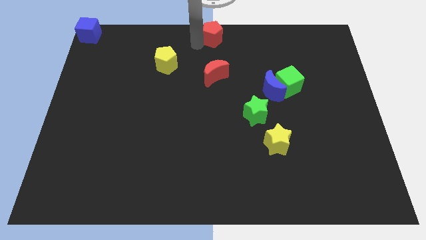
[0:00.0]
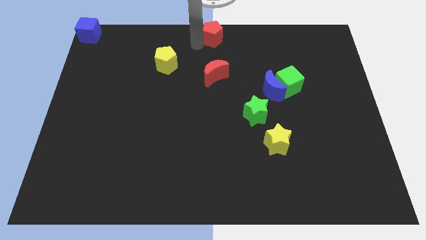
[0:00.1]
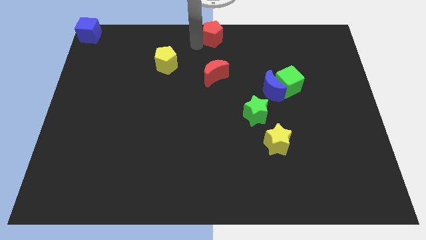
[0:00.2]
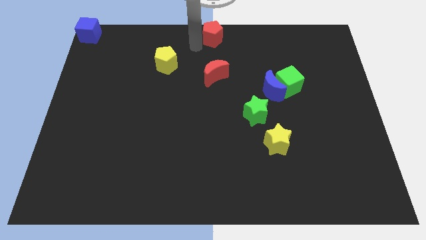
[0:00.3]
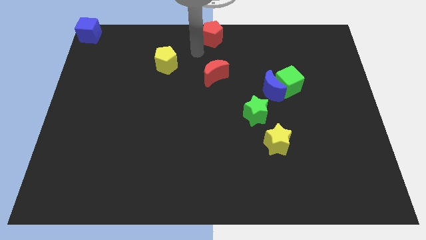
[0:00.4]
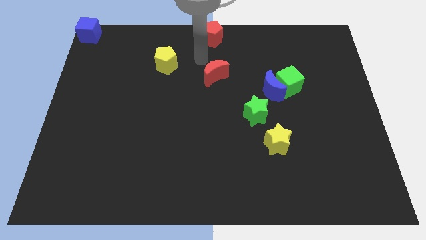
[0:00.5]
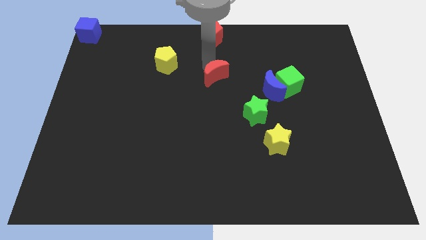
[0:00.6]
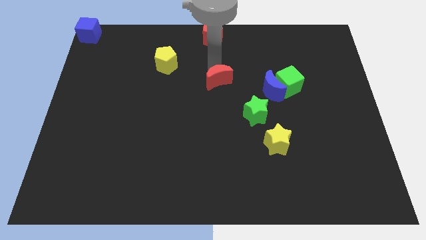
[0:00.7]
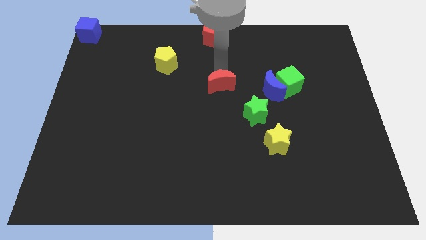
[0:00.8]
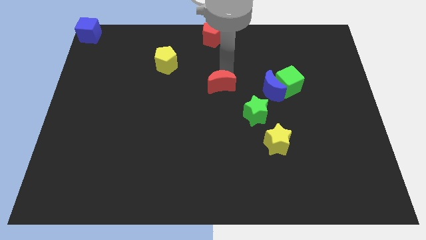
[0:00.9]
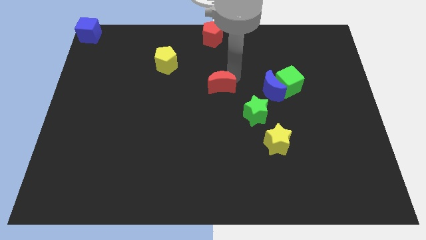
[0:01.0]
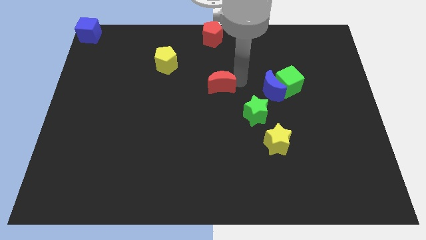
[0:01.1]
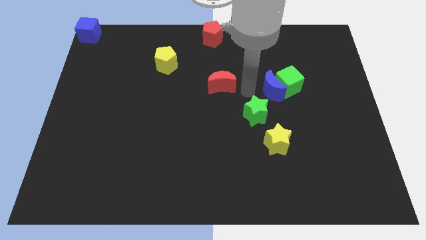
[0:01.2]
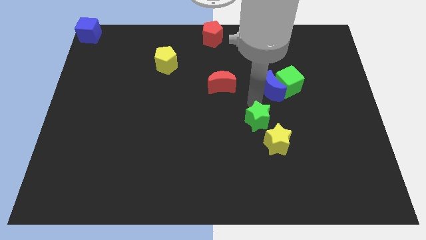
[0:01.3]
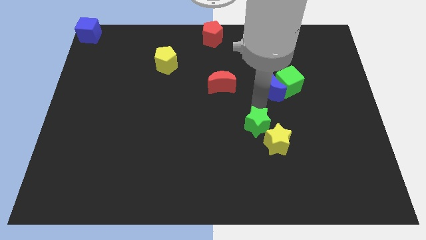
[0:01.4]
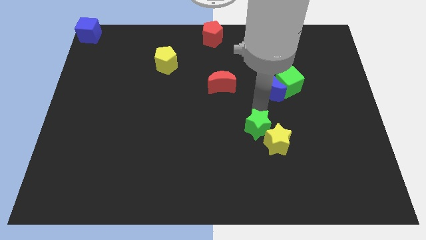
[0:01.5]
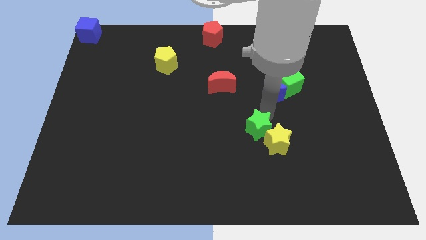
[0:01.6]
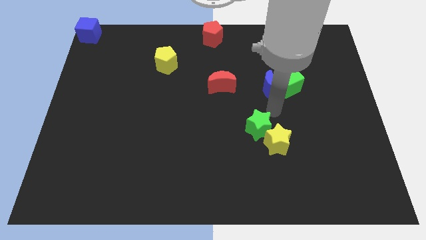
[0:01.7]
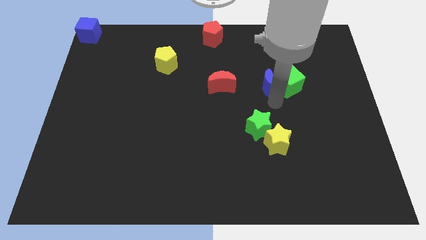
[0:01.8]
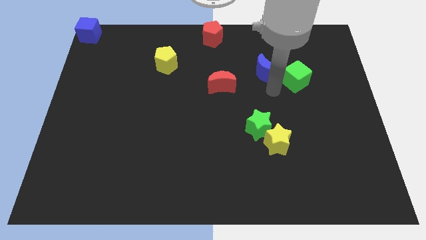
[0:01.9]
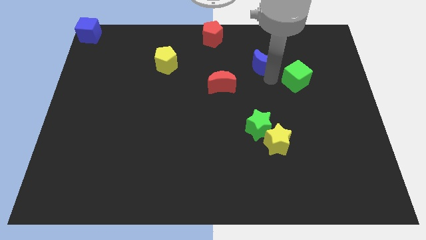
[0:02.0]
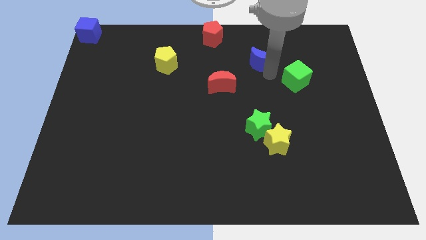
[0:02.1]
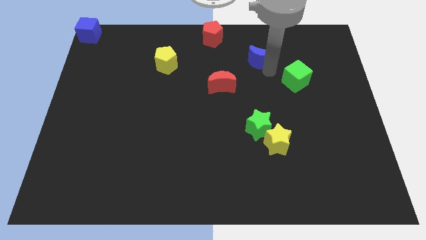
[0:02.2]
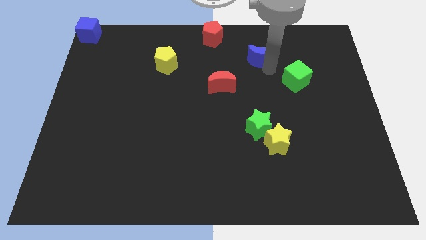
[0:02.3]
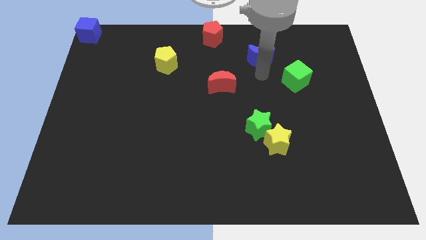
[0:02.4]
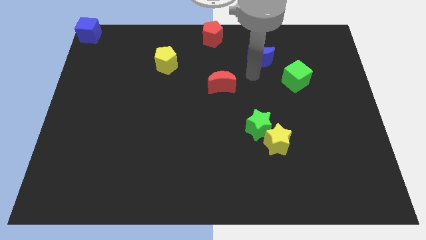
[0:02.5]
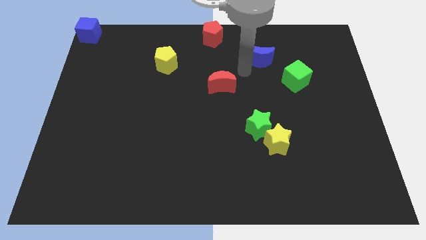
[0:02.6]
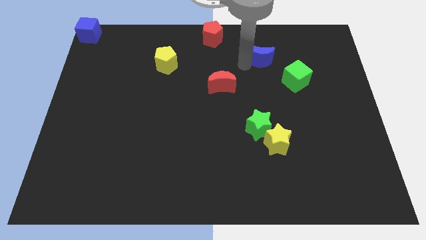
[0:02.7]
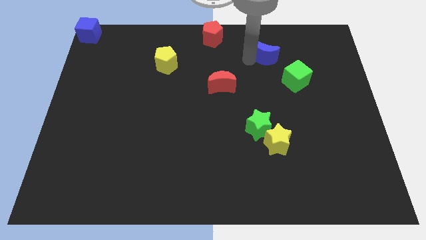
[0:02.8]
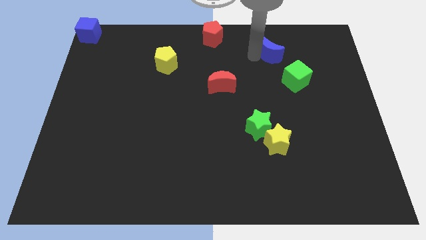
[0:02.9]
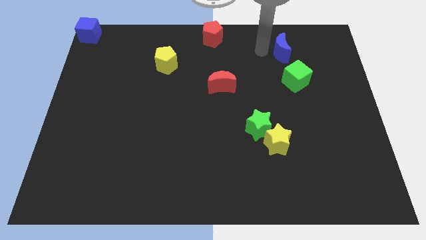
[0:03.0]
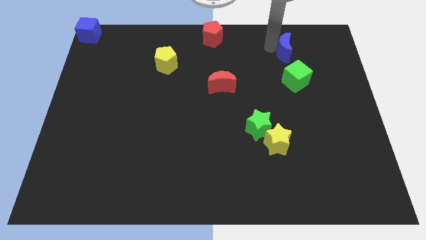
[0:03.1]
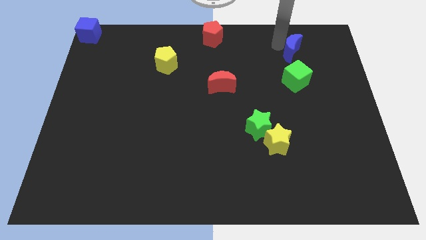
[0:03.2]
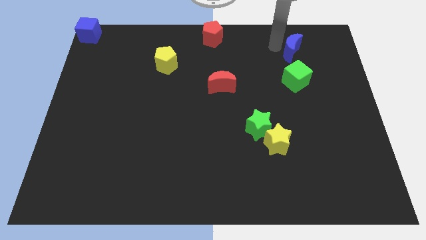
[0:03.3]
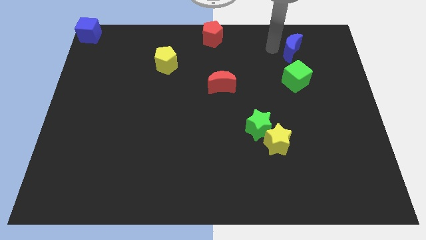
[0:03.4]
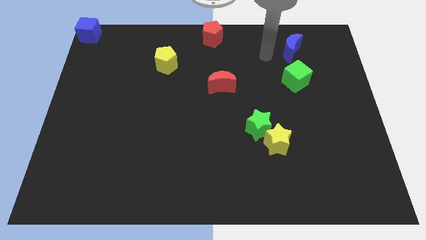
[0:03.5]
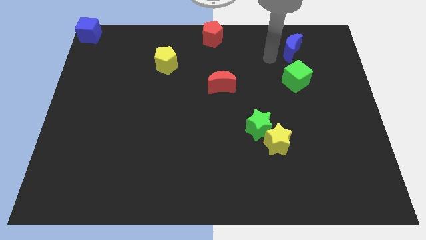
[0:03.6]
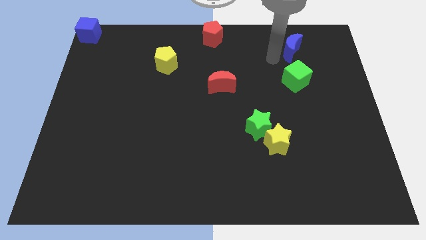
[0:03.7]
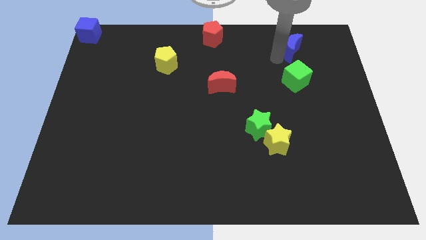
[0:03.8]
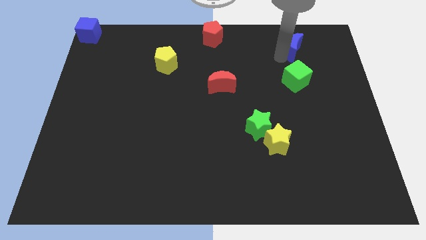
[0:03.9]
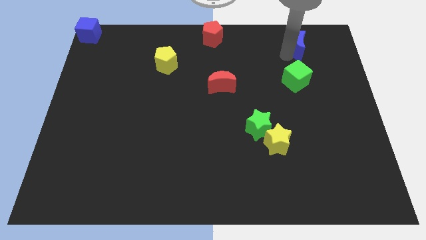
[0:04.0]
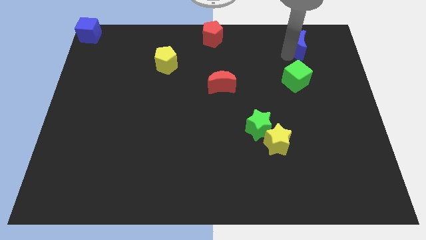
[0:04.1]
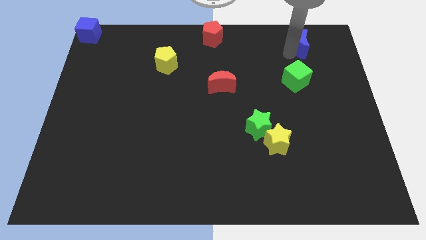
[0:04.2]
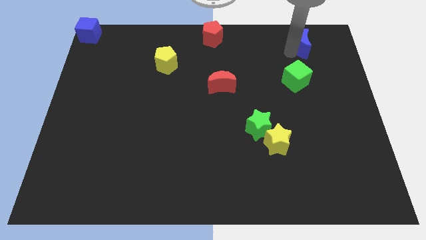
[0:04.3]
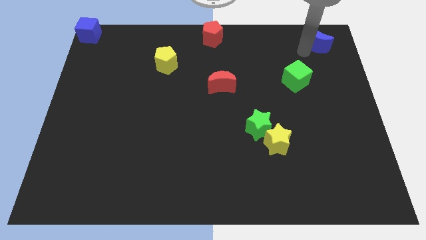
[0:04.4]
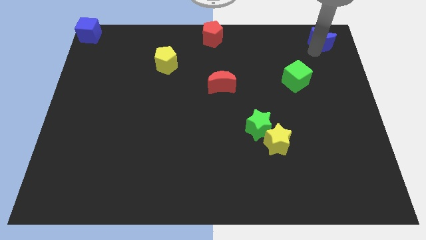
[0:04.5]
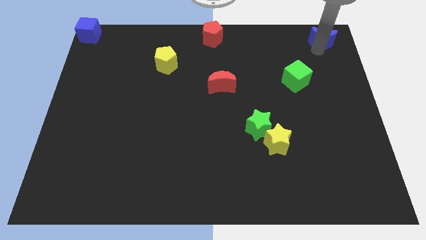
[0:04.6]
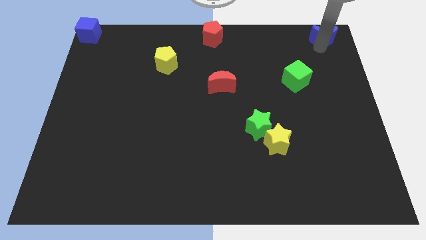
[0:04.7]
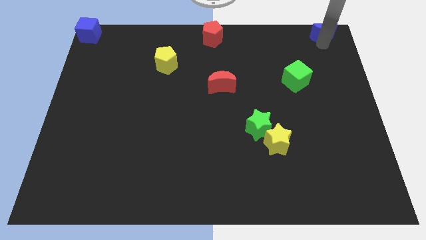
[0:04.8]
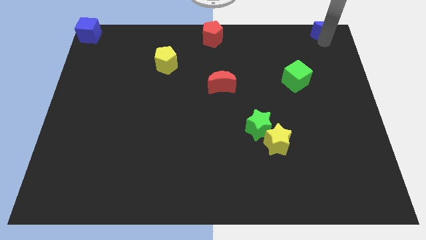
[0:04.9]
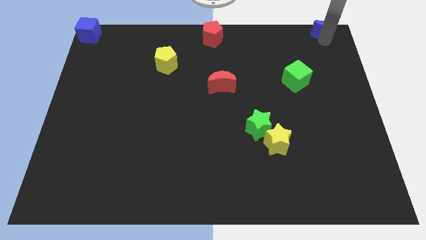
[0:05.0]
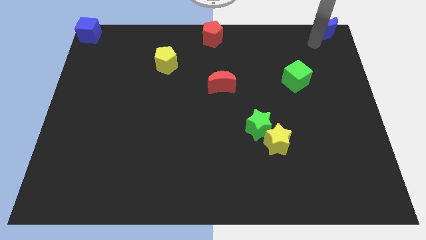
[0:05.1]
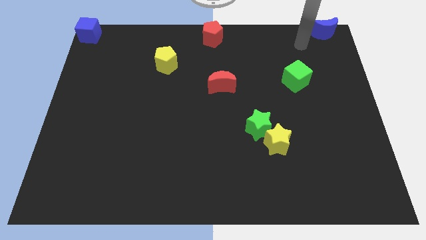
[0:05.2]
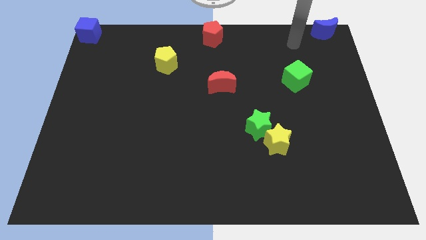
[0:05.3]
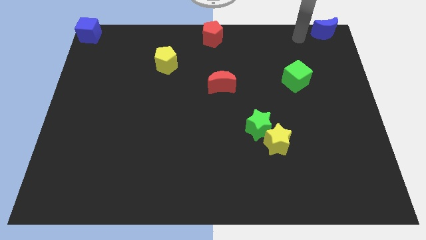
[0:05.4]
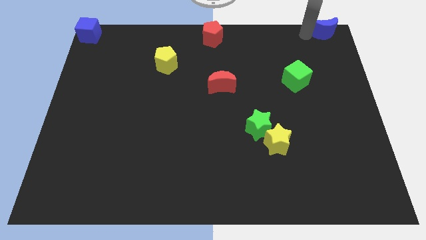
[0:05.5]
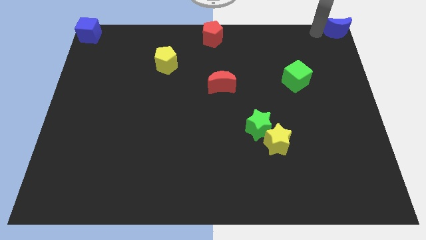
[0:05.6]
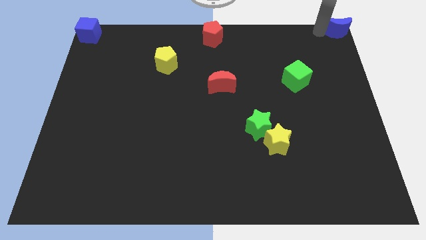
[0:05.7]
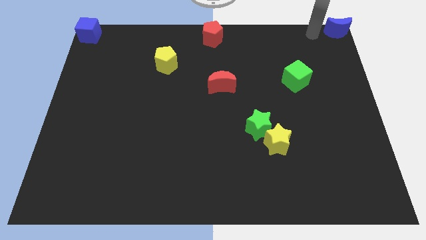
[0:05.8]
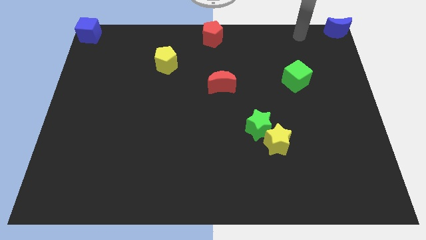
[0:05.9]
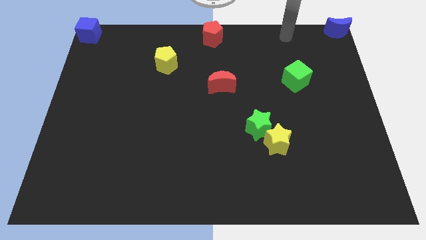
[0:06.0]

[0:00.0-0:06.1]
move the blue moon to the top right corner of the board

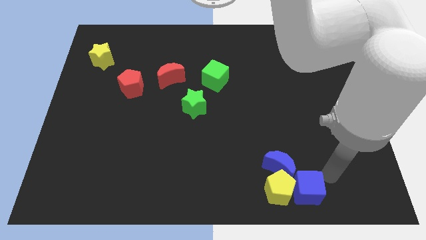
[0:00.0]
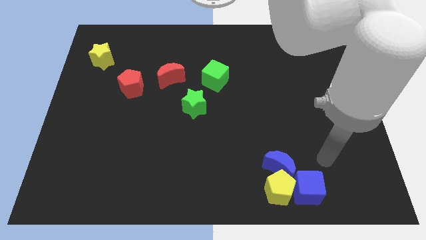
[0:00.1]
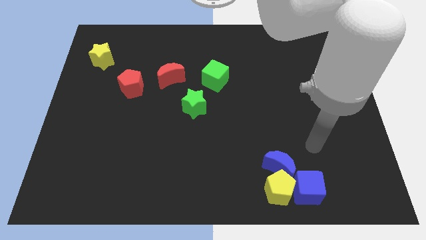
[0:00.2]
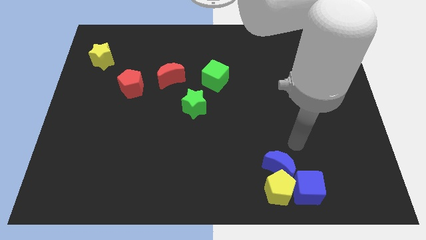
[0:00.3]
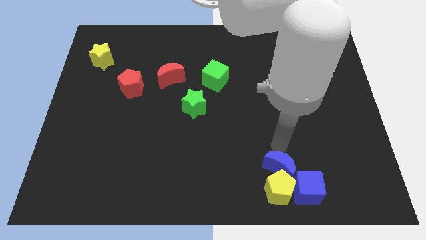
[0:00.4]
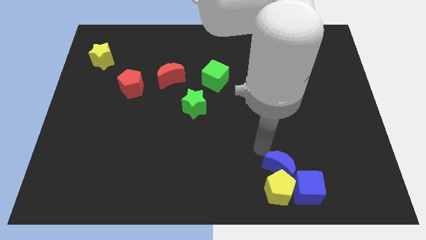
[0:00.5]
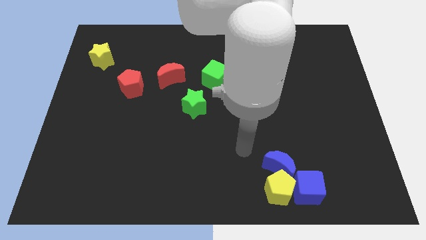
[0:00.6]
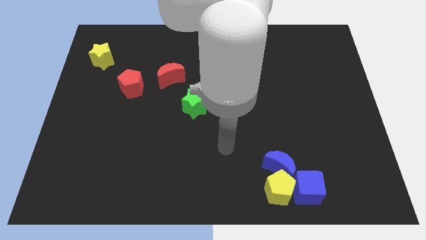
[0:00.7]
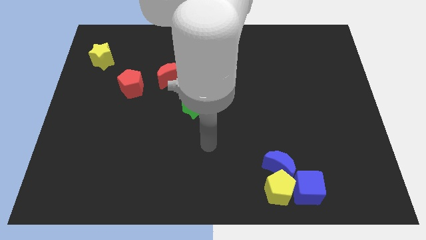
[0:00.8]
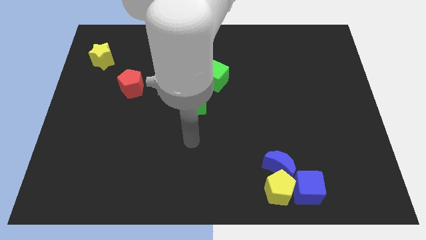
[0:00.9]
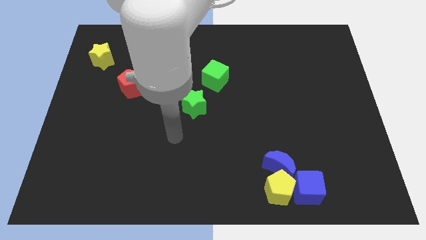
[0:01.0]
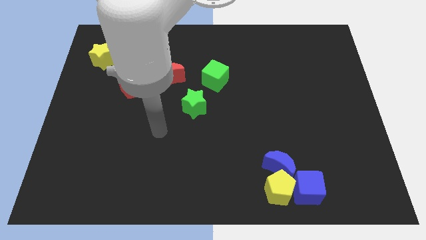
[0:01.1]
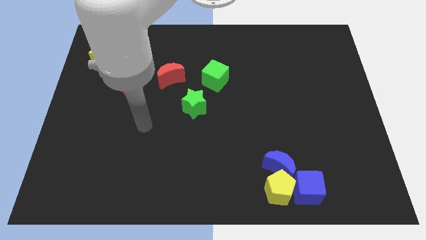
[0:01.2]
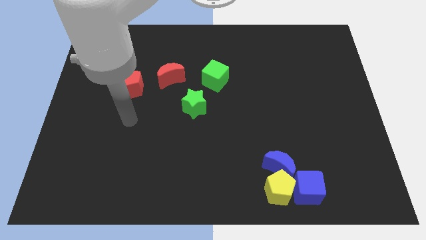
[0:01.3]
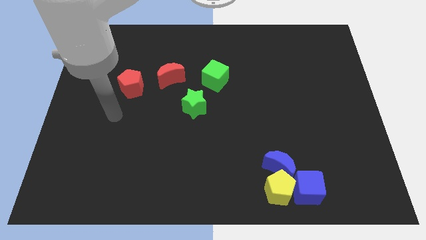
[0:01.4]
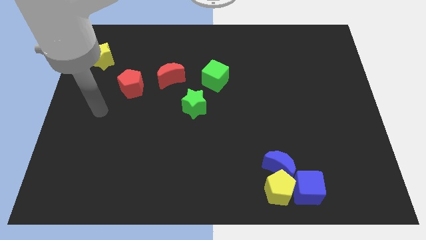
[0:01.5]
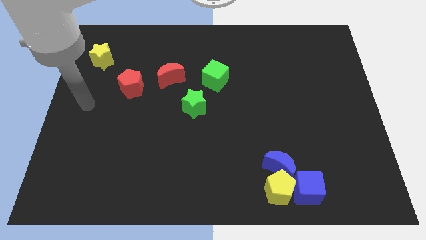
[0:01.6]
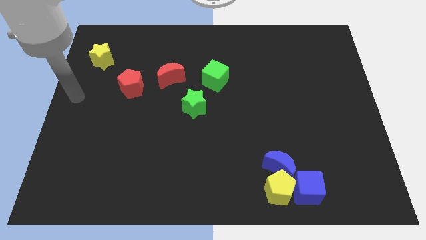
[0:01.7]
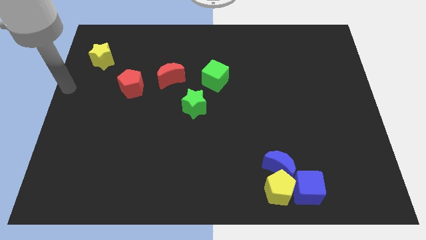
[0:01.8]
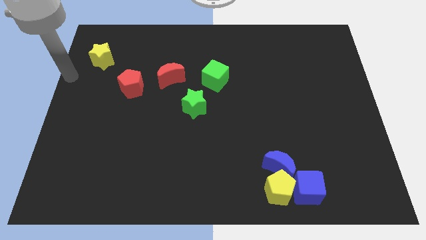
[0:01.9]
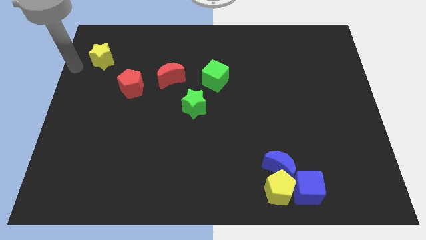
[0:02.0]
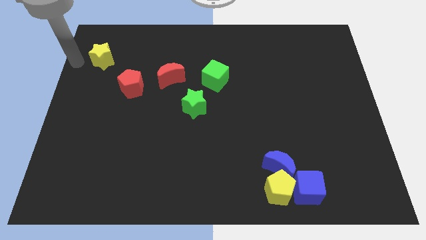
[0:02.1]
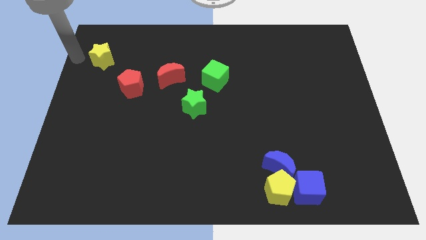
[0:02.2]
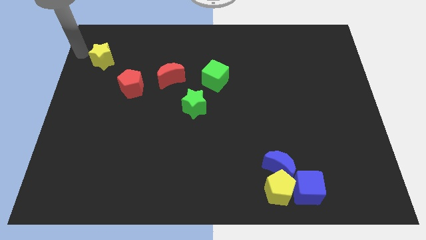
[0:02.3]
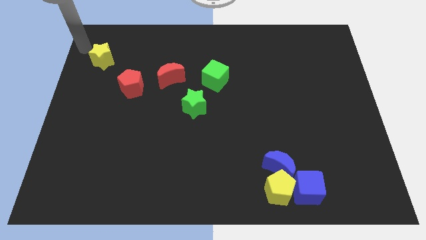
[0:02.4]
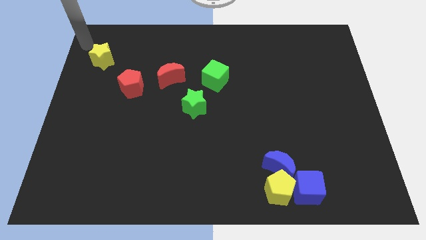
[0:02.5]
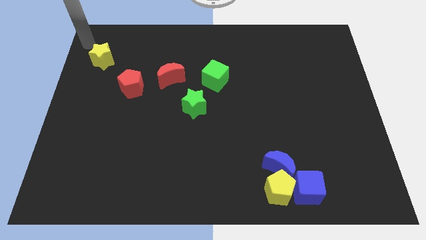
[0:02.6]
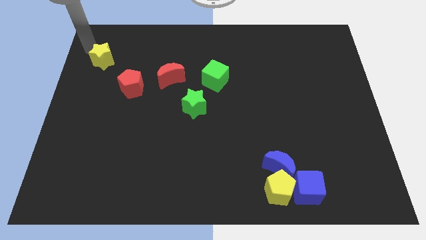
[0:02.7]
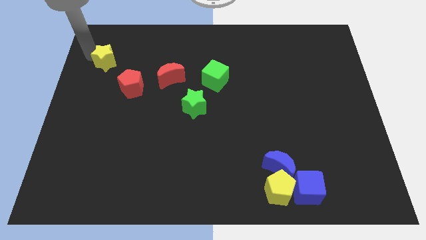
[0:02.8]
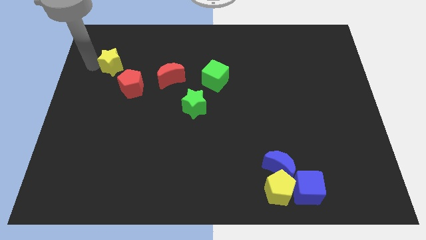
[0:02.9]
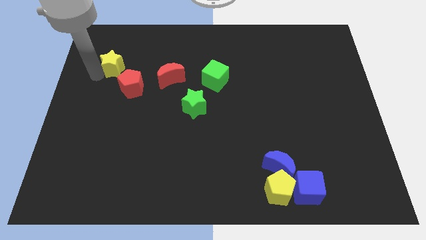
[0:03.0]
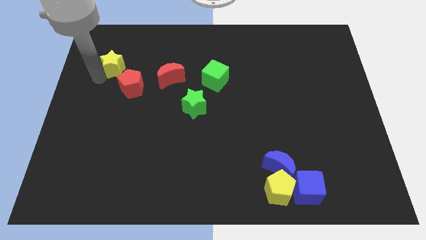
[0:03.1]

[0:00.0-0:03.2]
move the yellow star slightly towards the top of the red pentagon
